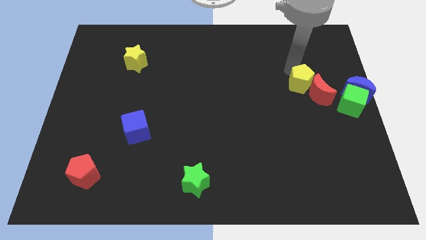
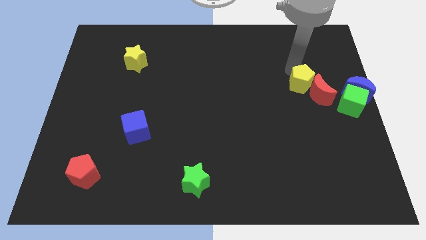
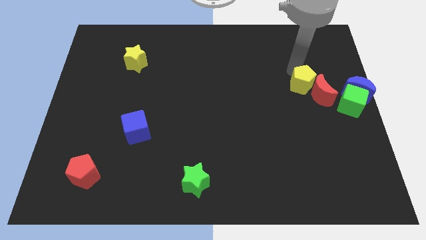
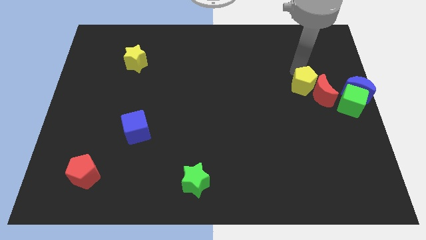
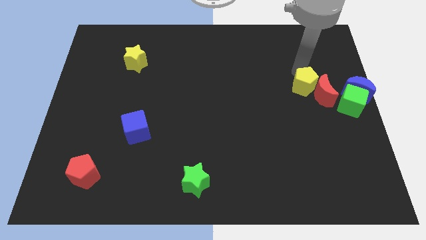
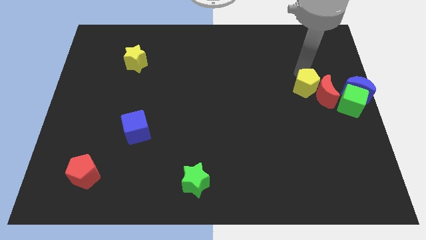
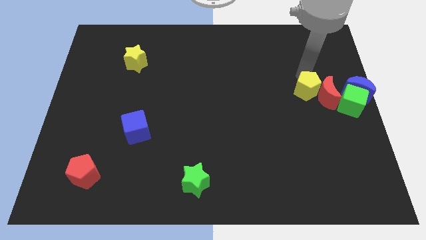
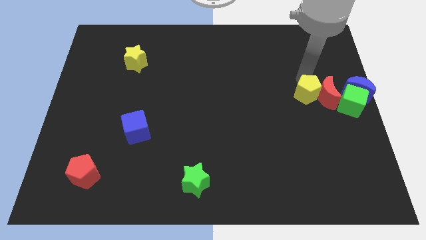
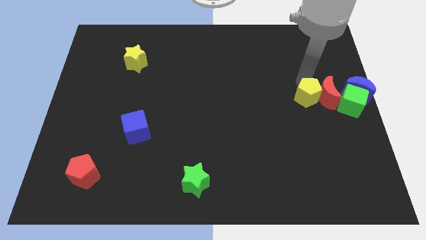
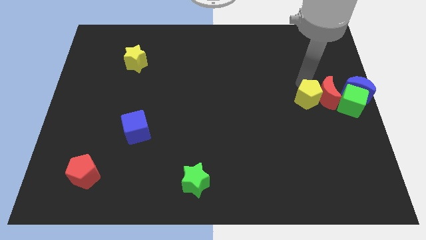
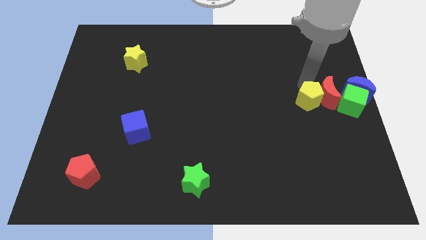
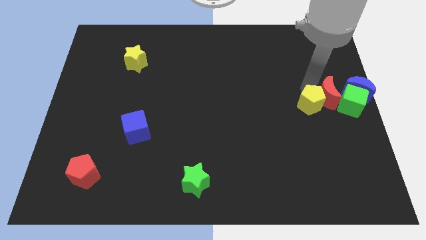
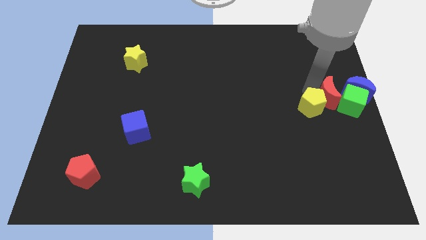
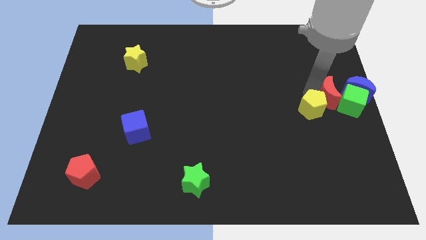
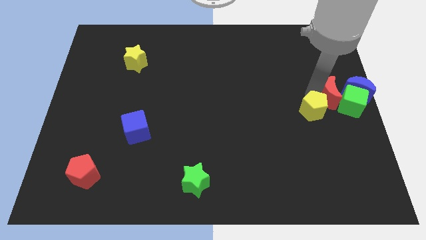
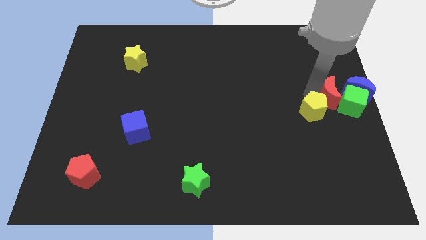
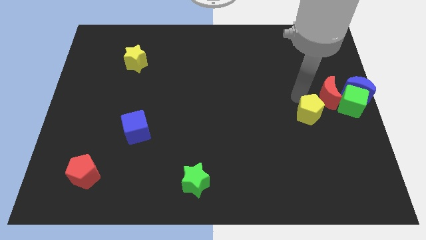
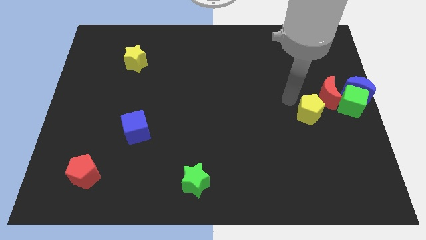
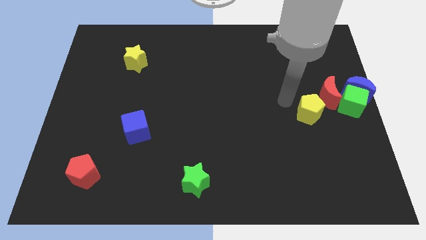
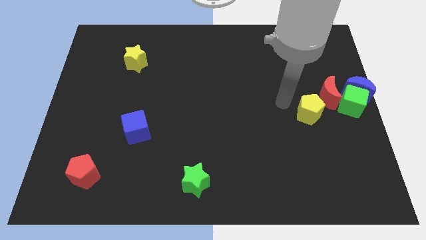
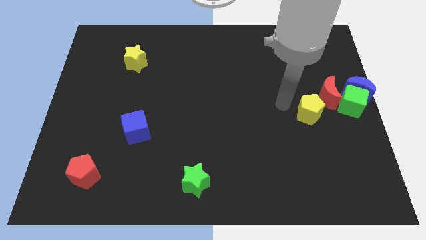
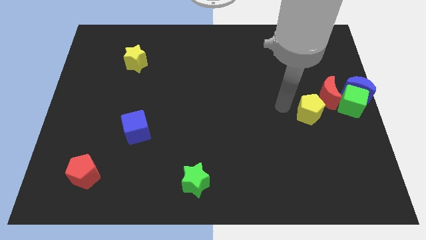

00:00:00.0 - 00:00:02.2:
push the yellow pentagon to bottom left of red crescent

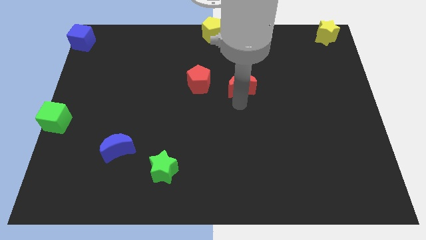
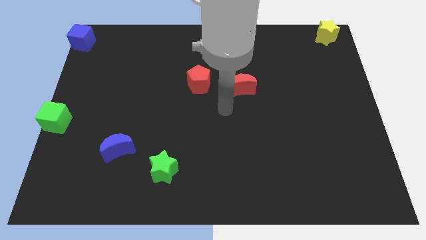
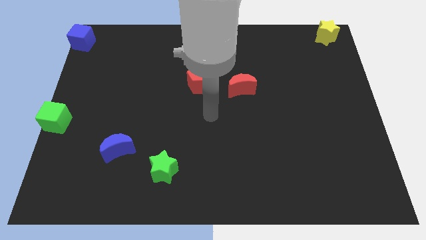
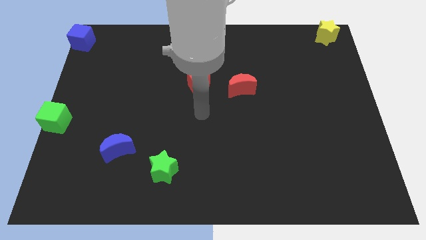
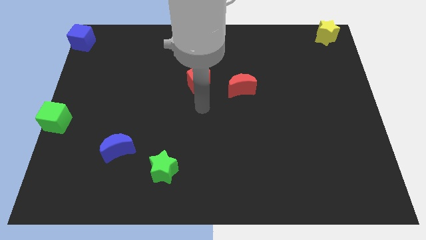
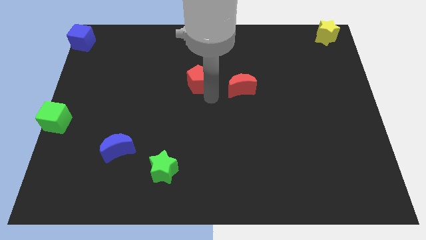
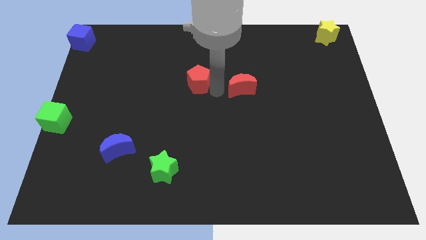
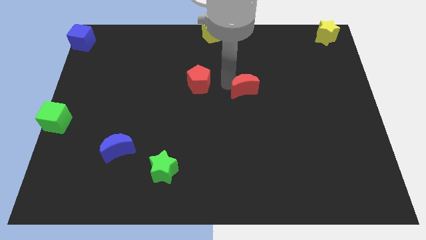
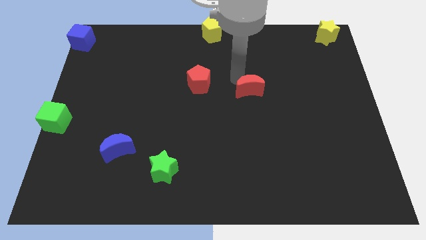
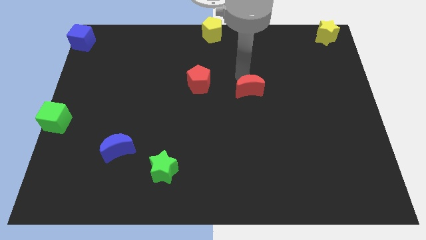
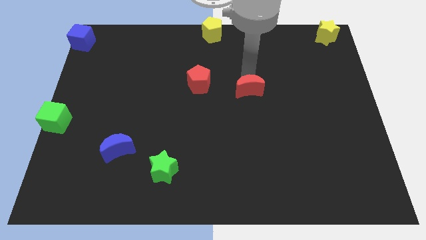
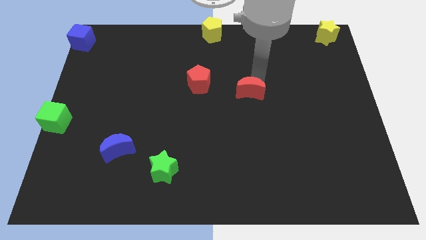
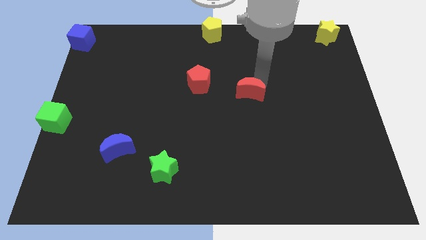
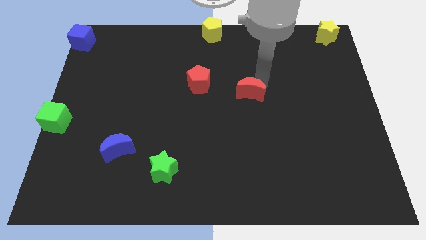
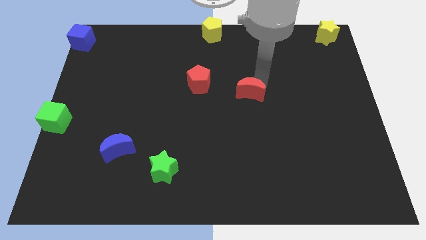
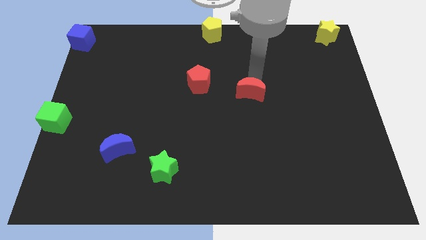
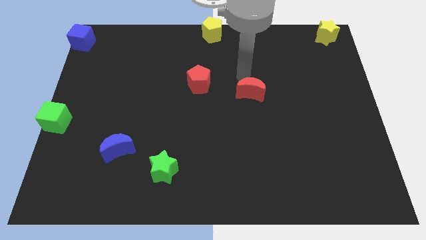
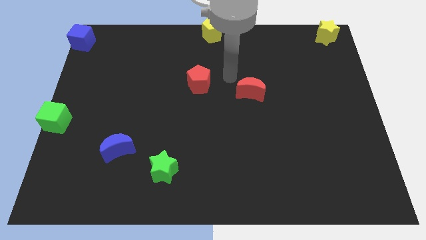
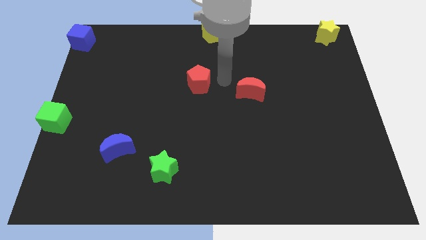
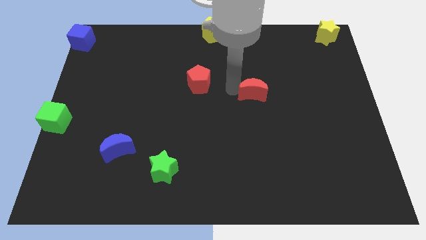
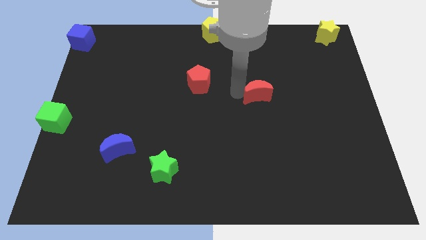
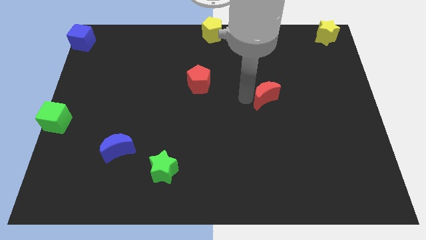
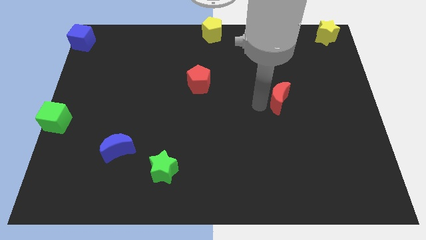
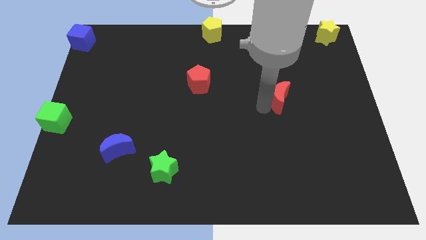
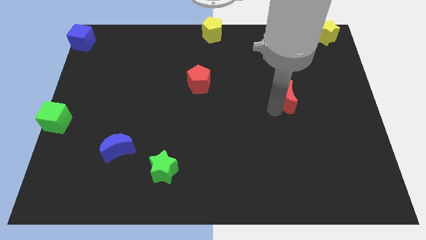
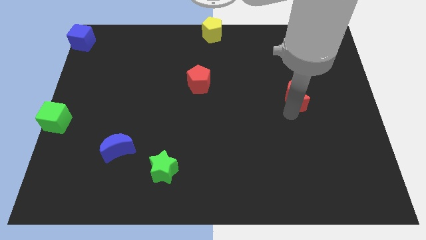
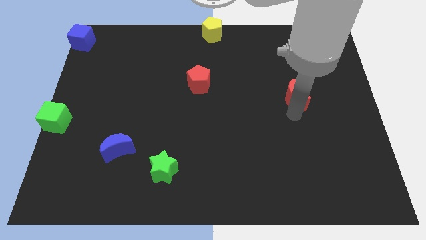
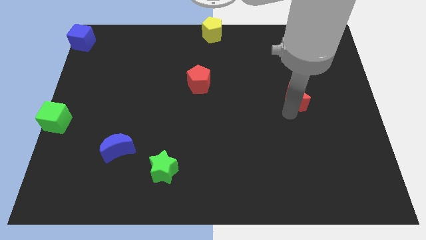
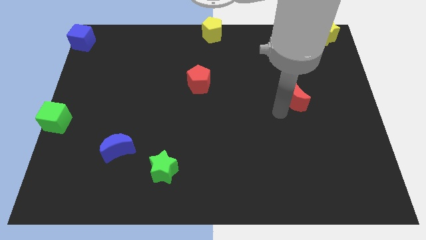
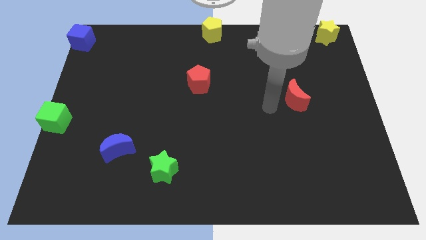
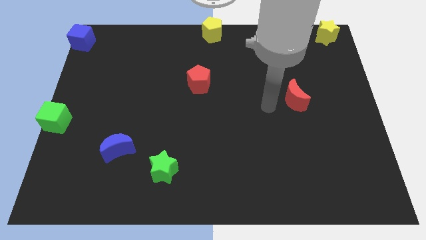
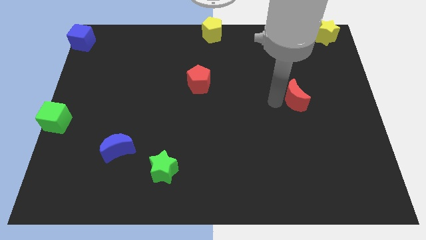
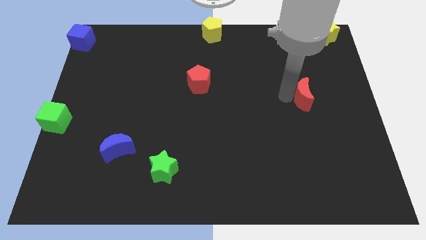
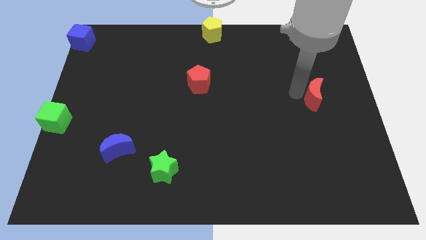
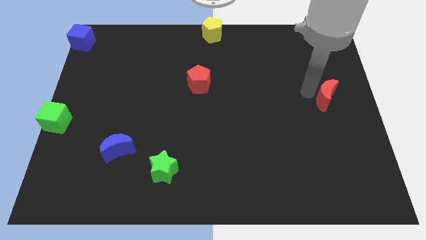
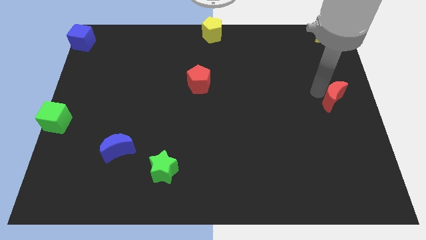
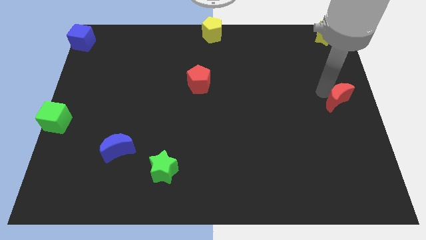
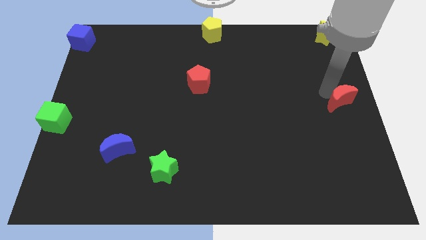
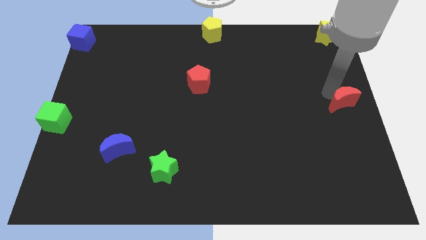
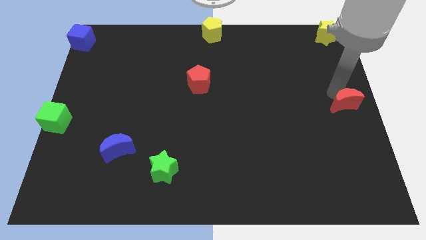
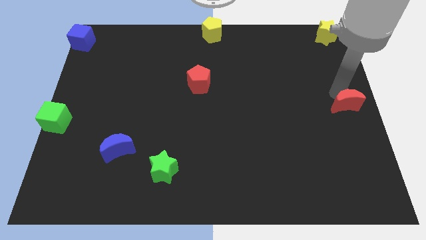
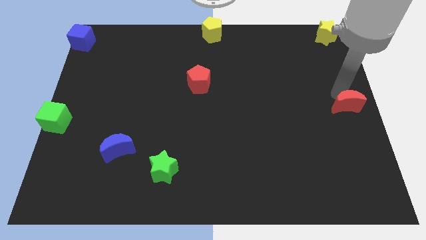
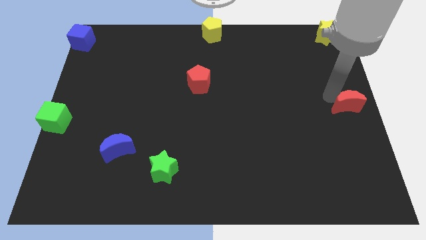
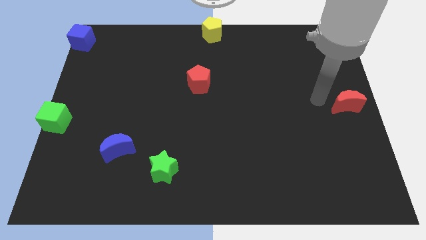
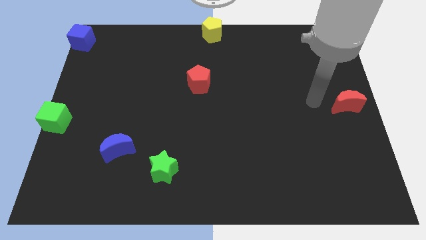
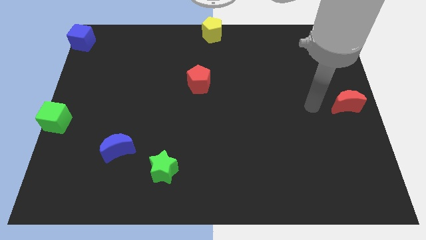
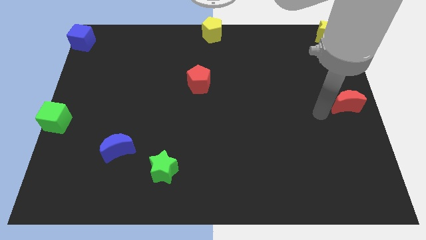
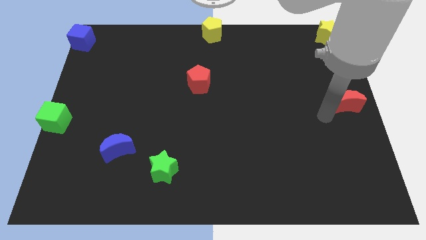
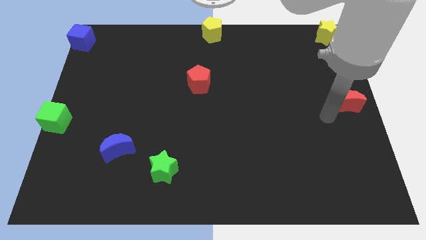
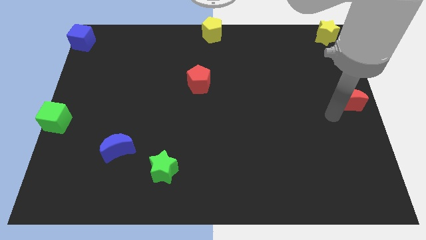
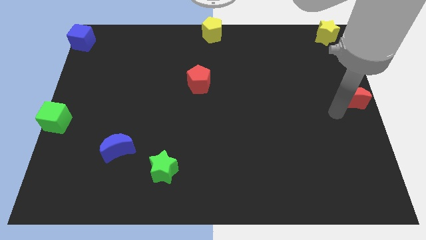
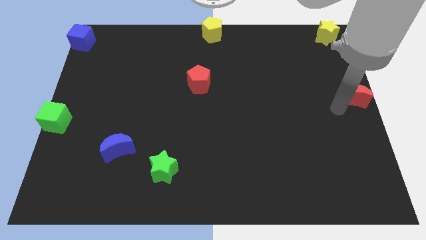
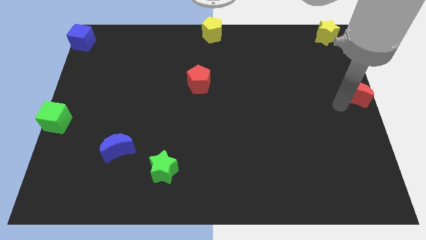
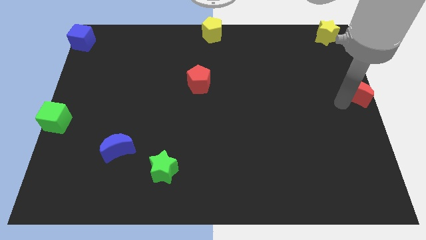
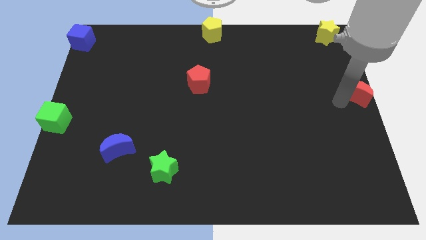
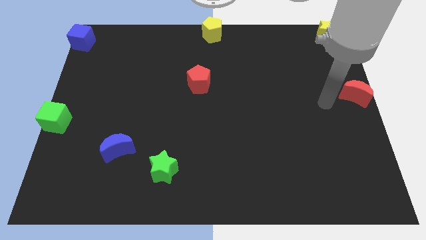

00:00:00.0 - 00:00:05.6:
move the red crescent to the right center of the board

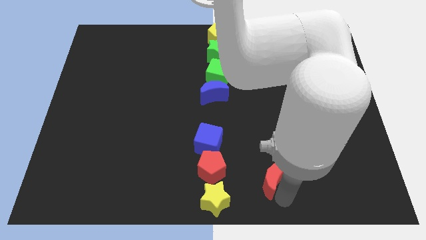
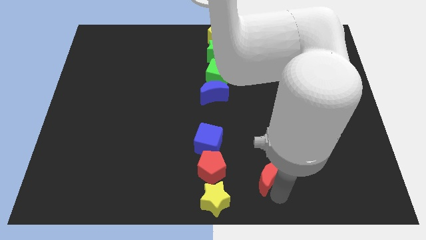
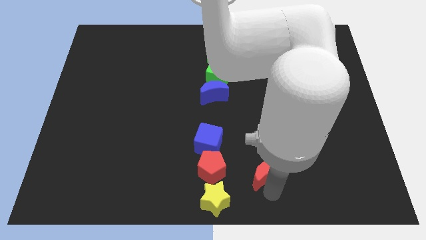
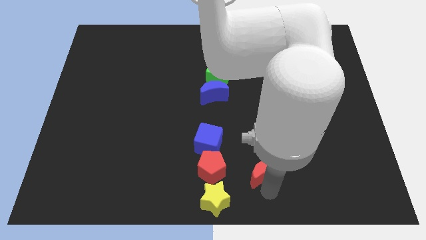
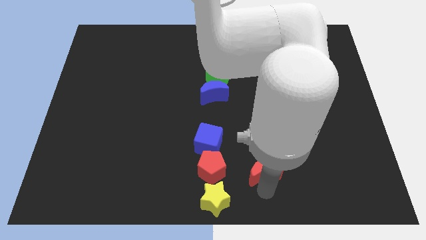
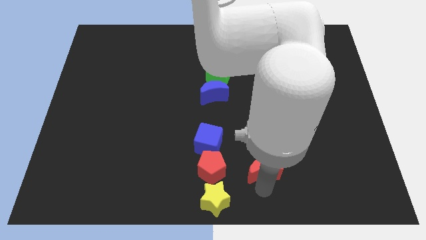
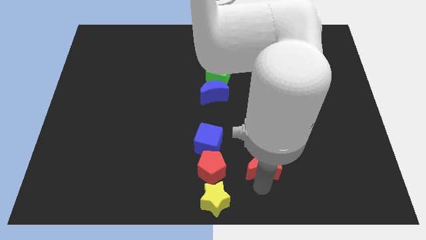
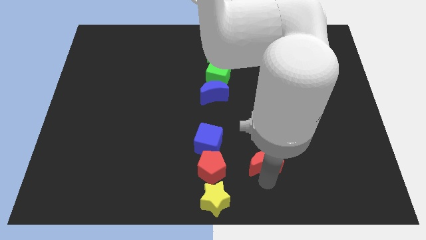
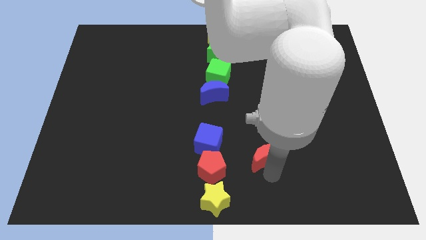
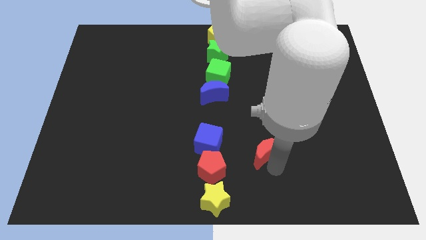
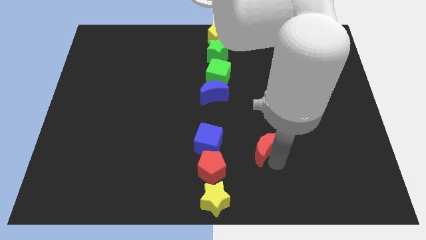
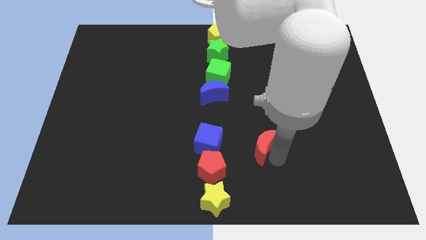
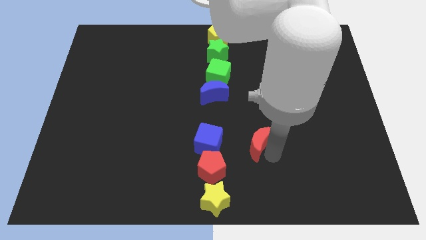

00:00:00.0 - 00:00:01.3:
place the red moon right to the blue cube
